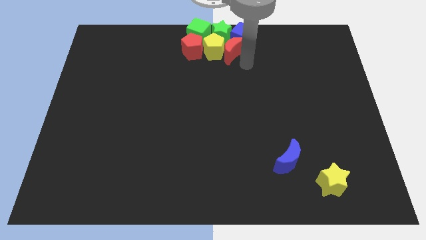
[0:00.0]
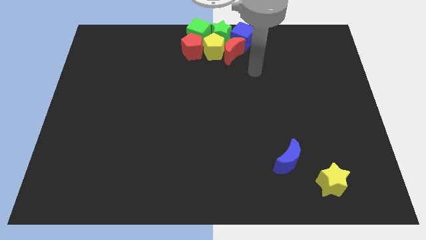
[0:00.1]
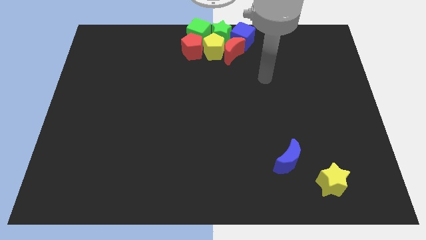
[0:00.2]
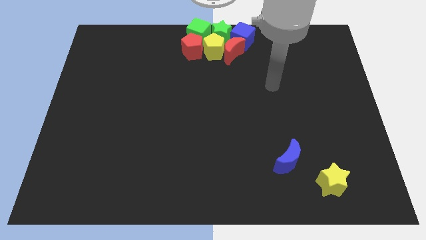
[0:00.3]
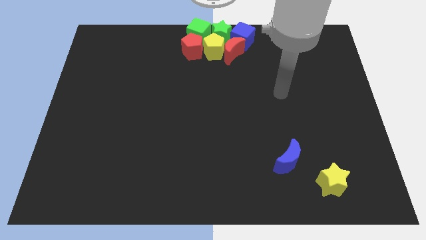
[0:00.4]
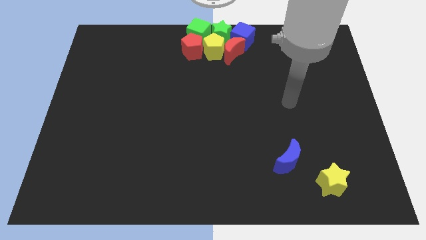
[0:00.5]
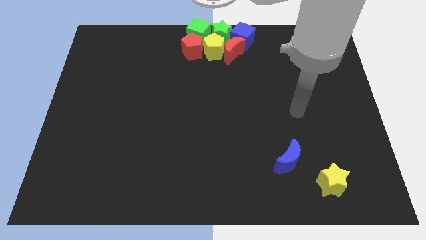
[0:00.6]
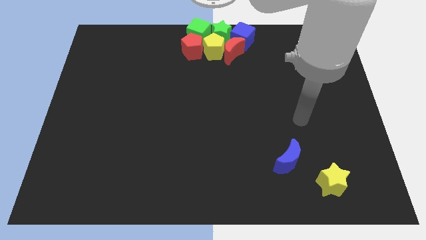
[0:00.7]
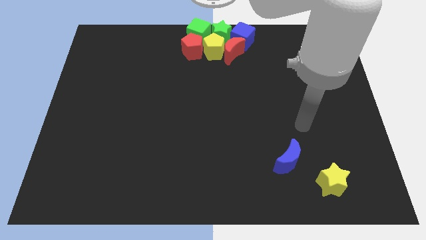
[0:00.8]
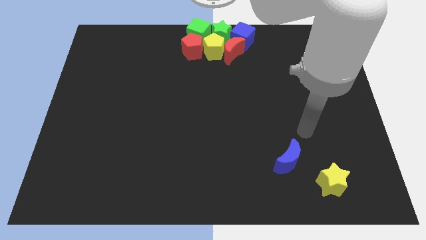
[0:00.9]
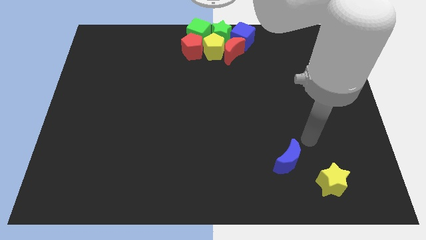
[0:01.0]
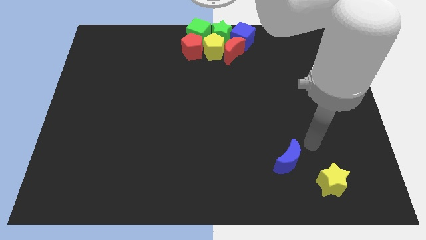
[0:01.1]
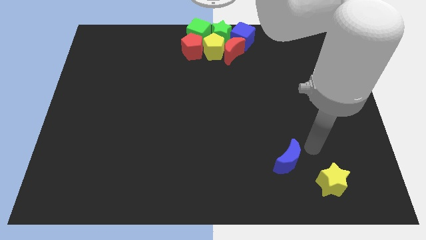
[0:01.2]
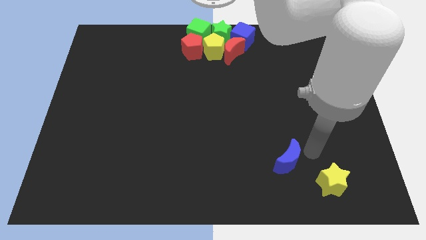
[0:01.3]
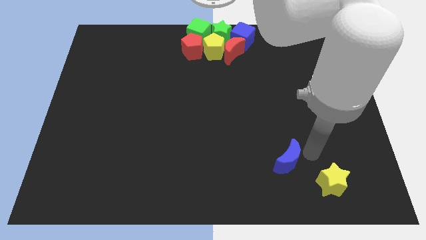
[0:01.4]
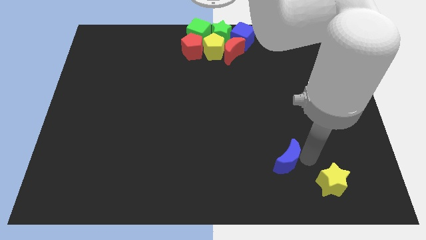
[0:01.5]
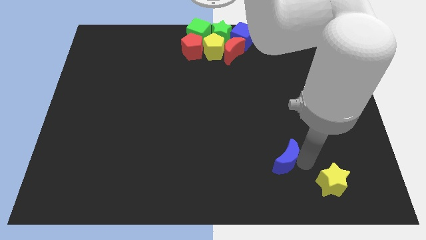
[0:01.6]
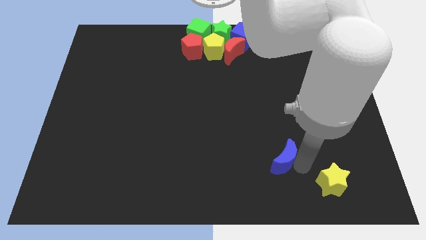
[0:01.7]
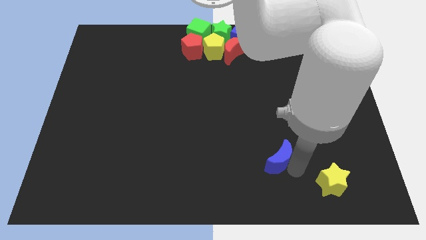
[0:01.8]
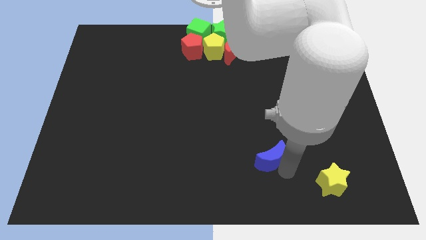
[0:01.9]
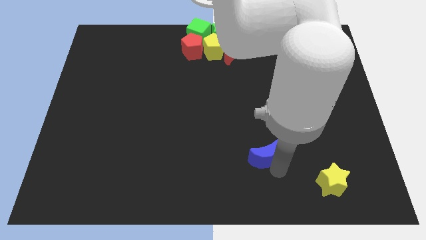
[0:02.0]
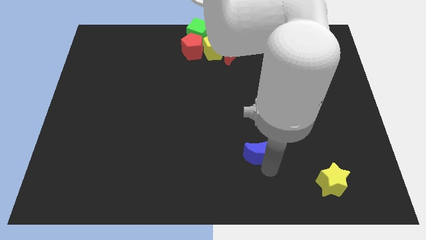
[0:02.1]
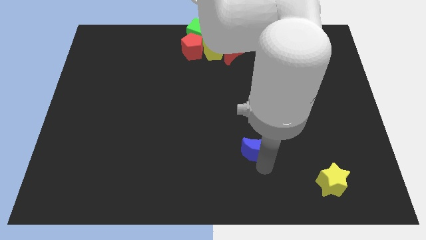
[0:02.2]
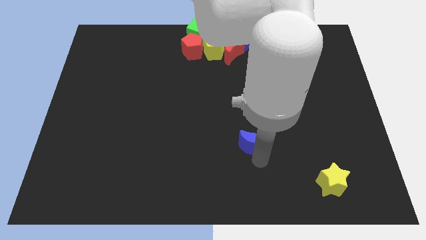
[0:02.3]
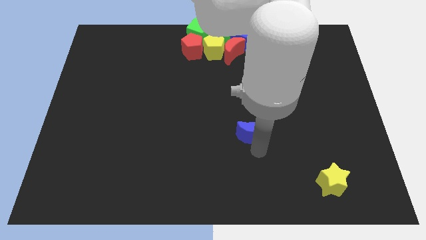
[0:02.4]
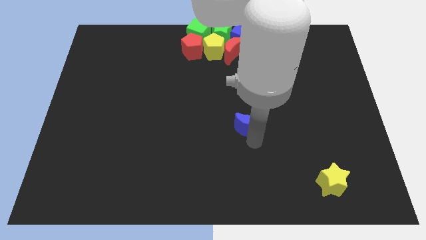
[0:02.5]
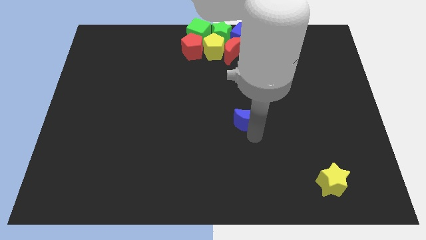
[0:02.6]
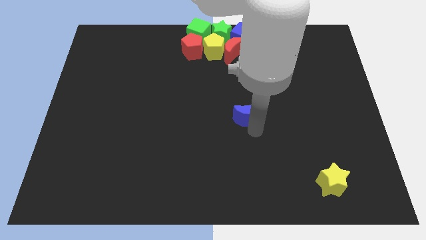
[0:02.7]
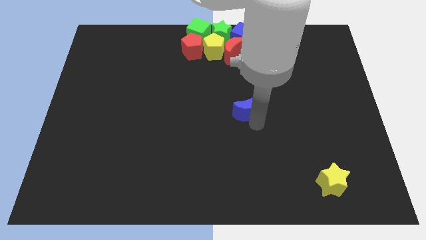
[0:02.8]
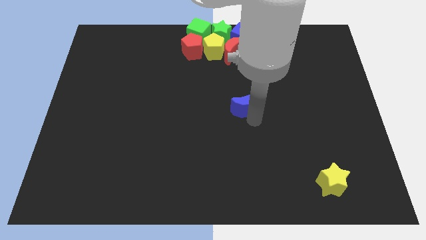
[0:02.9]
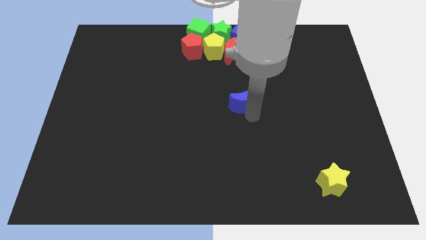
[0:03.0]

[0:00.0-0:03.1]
move the blue crescent towards the center of the board

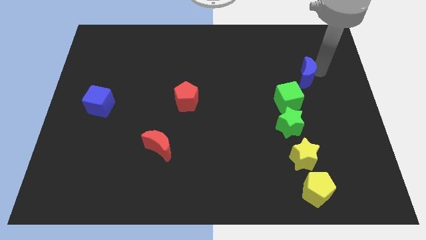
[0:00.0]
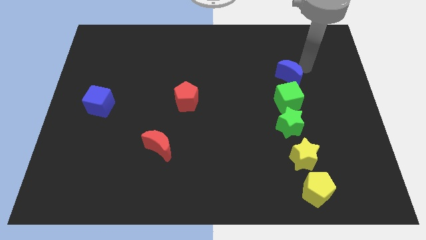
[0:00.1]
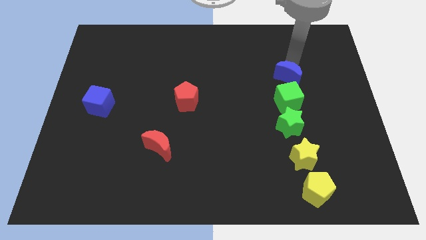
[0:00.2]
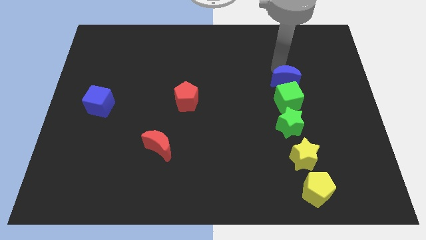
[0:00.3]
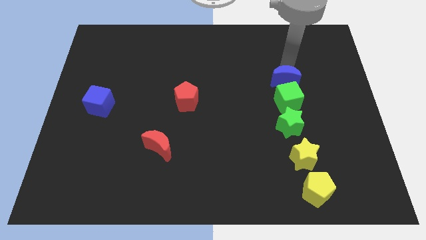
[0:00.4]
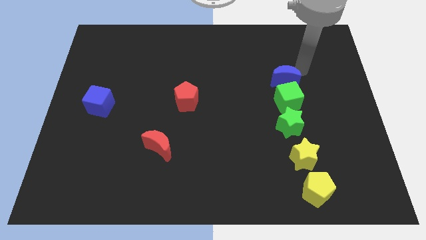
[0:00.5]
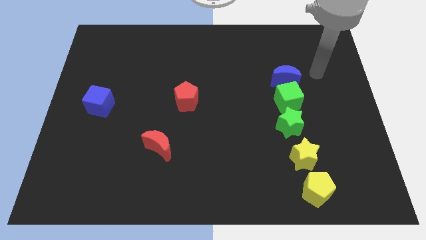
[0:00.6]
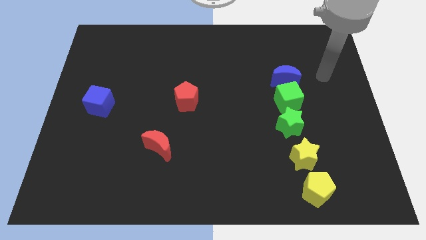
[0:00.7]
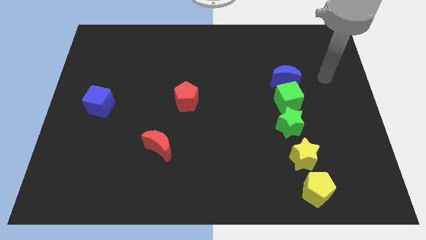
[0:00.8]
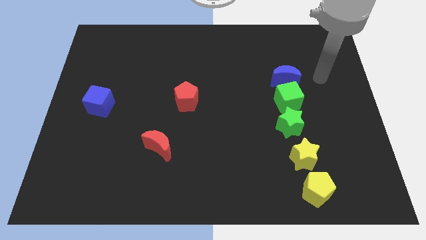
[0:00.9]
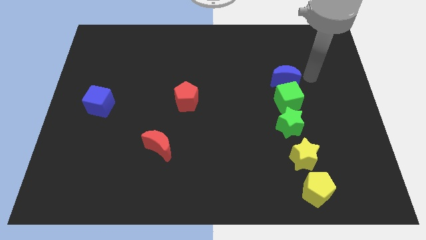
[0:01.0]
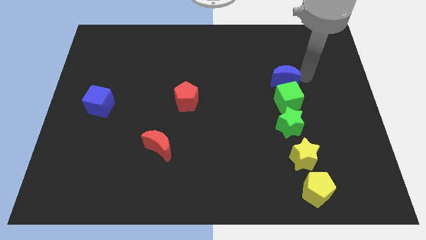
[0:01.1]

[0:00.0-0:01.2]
place blue moon above the green cube

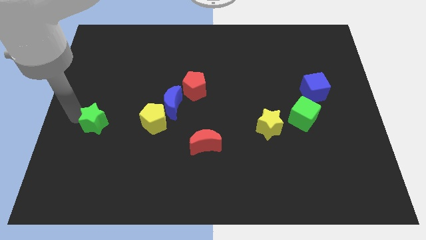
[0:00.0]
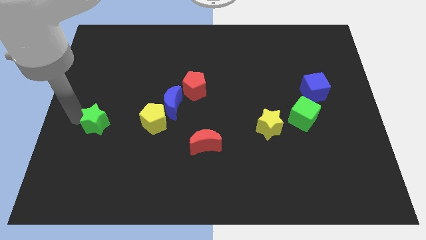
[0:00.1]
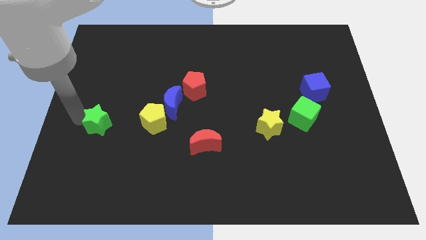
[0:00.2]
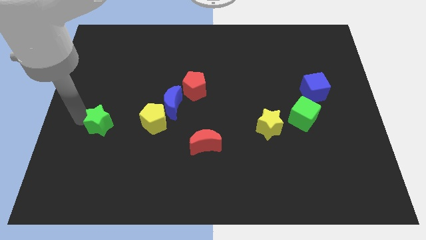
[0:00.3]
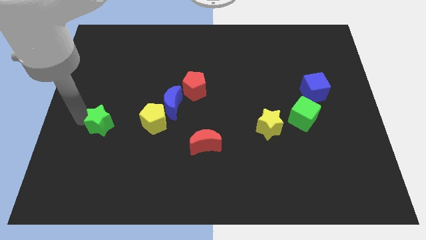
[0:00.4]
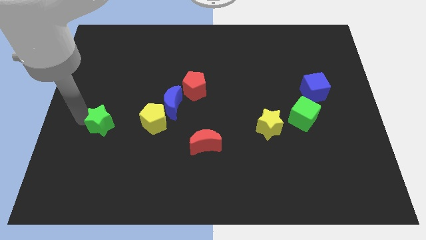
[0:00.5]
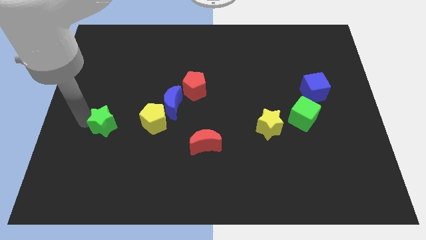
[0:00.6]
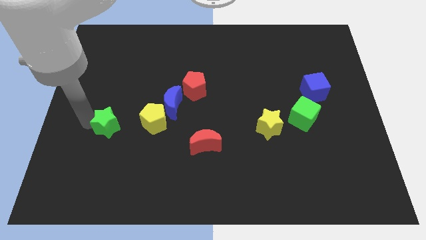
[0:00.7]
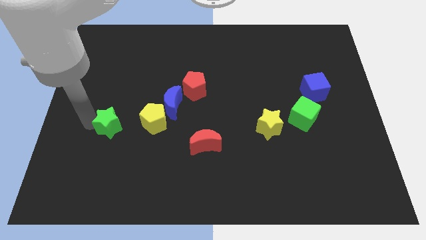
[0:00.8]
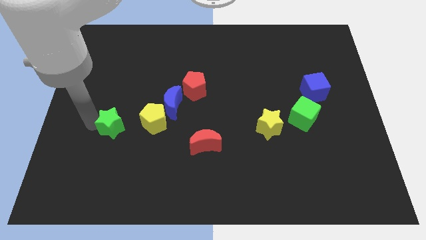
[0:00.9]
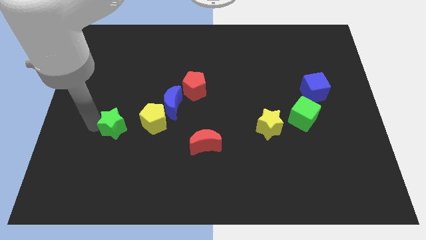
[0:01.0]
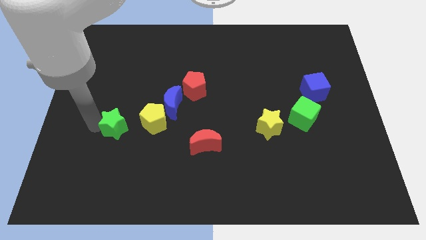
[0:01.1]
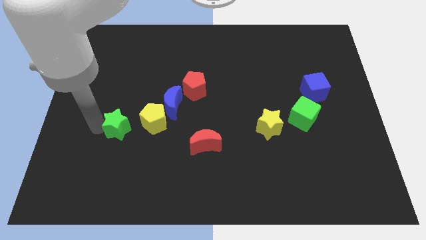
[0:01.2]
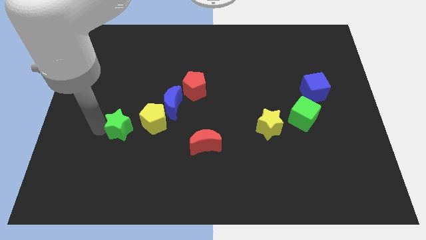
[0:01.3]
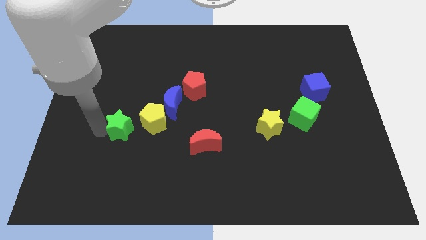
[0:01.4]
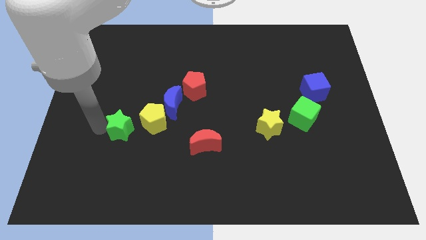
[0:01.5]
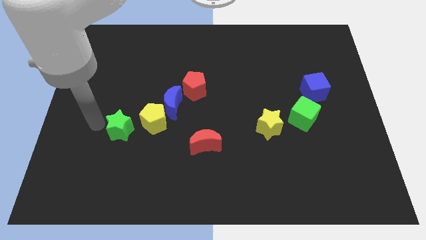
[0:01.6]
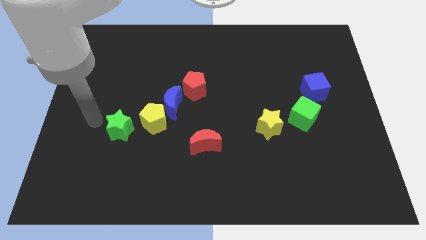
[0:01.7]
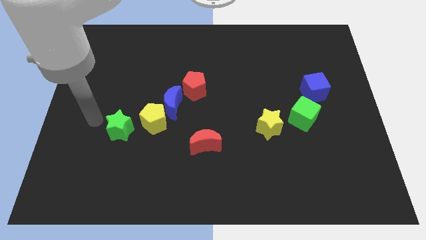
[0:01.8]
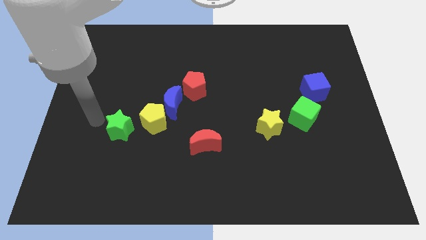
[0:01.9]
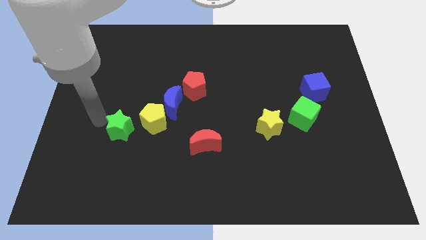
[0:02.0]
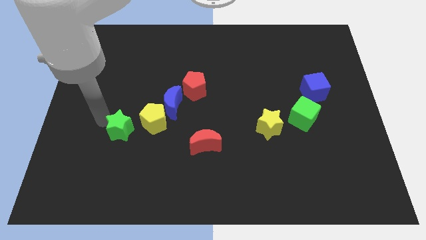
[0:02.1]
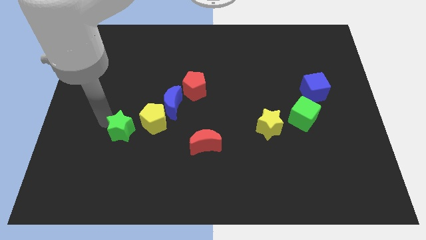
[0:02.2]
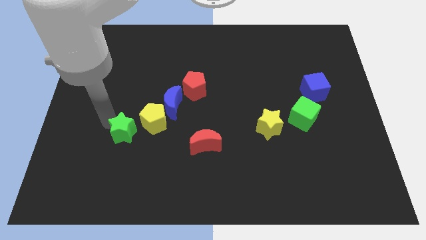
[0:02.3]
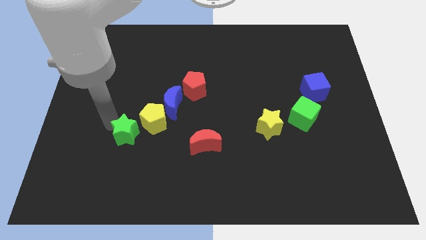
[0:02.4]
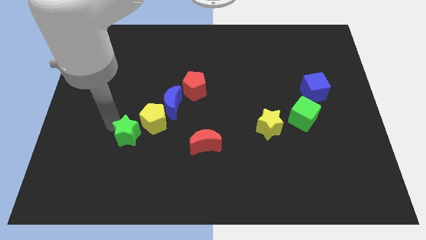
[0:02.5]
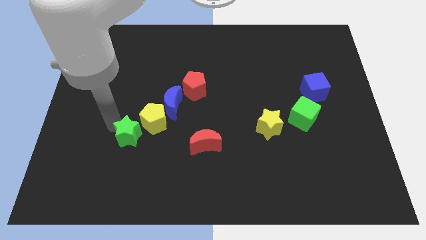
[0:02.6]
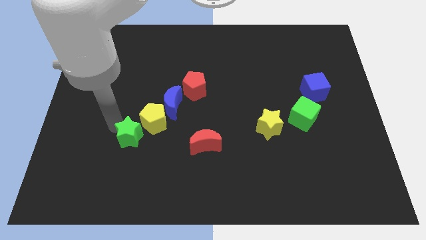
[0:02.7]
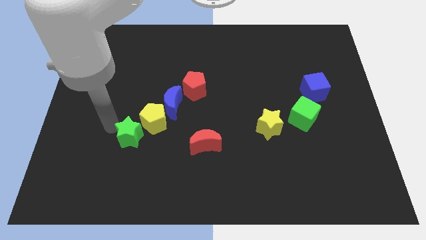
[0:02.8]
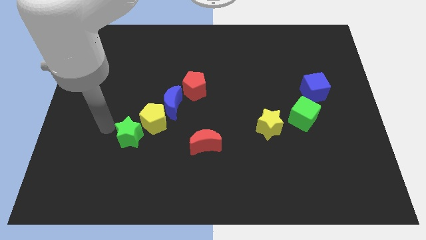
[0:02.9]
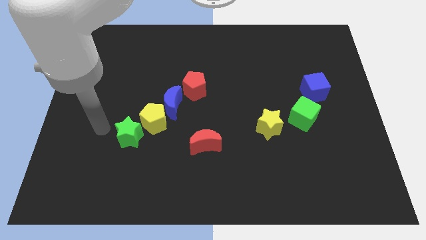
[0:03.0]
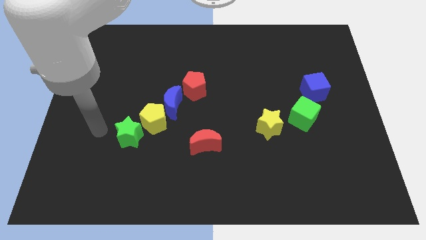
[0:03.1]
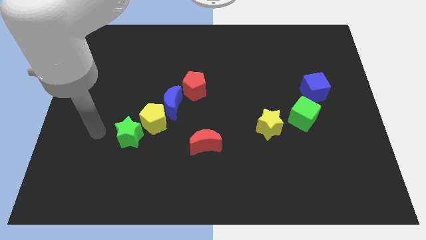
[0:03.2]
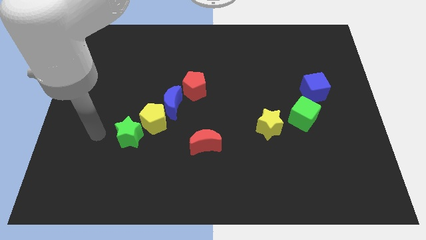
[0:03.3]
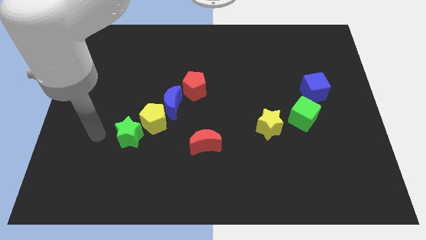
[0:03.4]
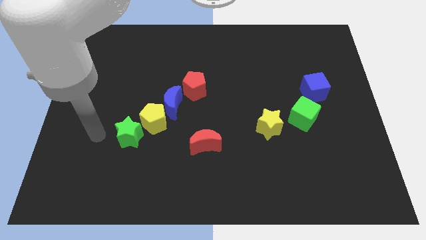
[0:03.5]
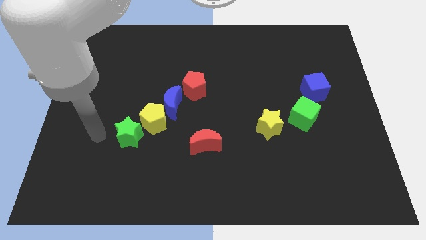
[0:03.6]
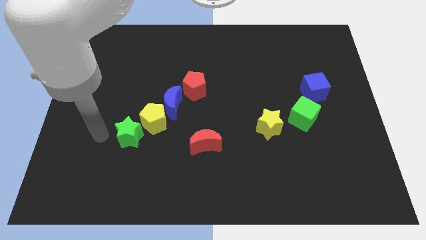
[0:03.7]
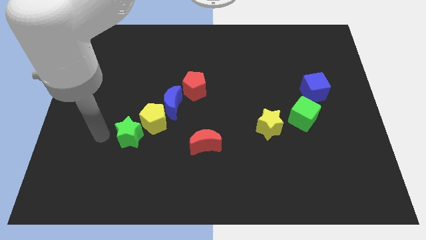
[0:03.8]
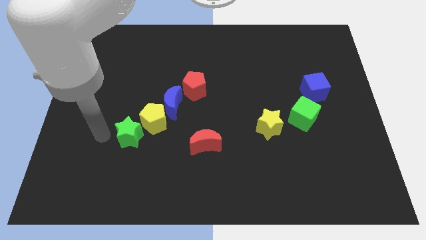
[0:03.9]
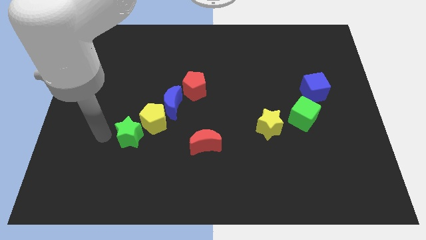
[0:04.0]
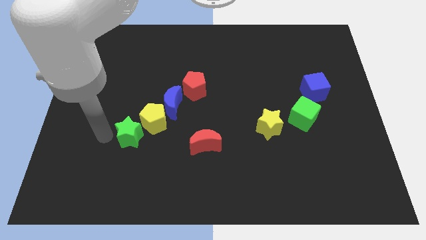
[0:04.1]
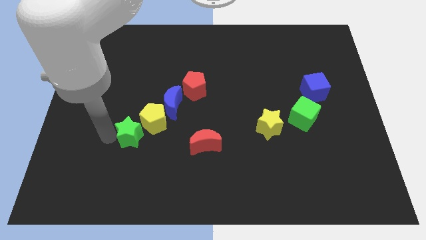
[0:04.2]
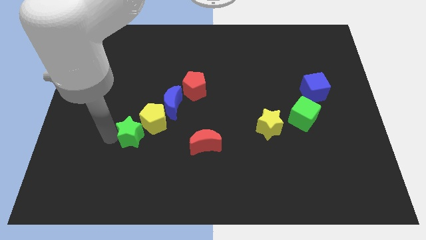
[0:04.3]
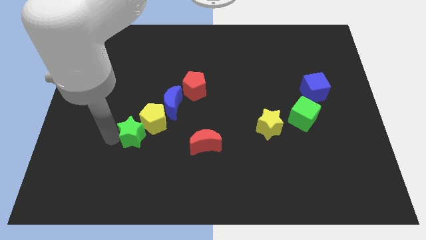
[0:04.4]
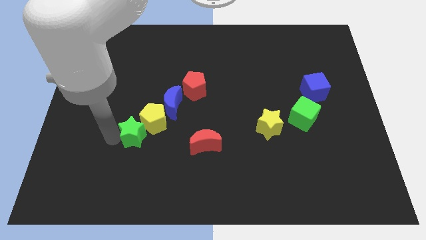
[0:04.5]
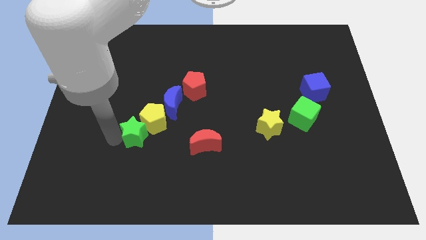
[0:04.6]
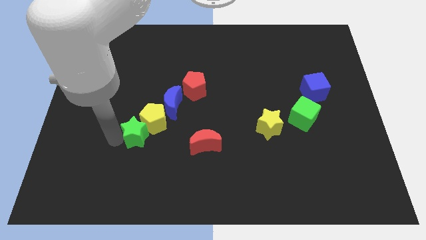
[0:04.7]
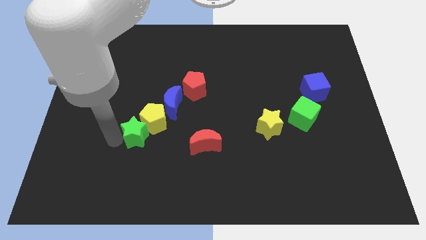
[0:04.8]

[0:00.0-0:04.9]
push the green star and the yellow pentagon together
